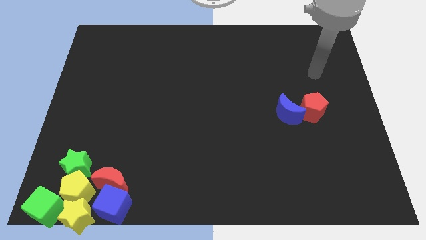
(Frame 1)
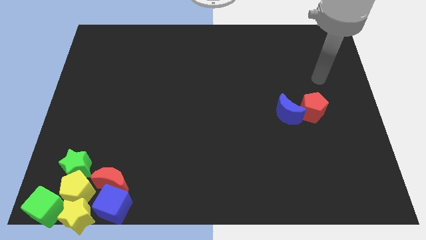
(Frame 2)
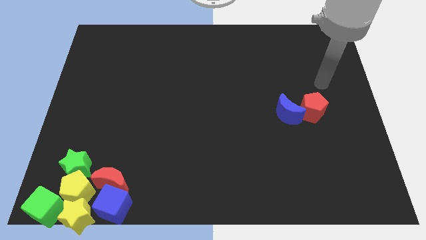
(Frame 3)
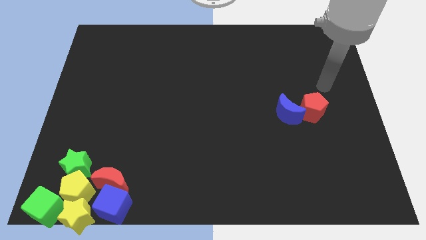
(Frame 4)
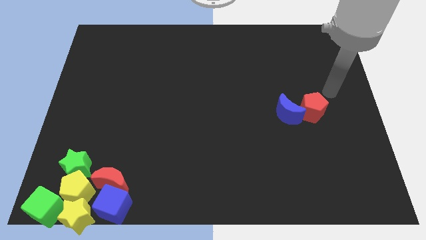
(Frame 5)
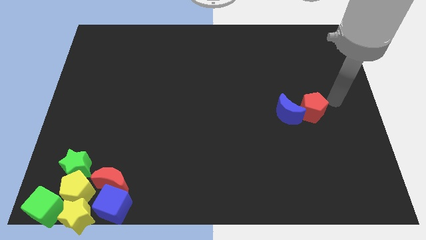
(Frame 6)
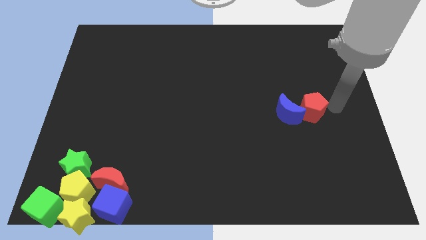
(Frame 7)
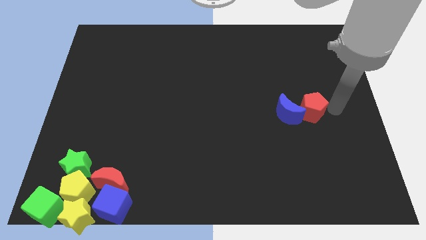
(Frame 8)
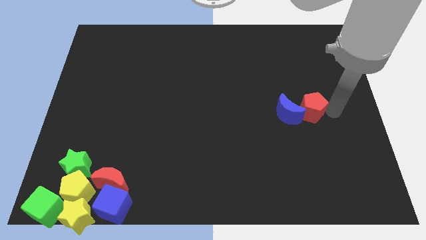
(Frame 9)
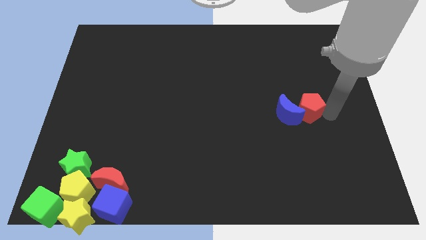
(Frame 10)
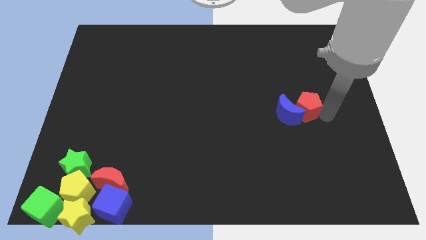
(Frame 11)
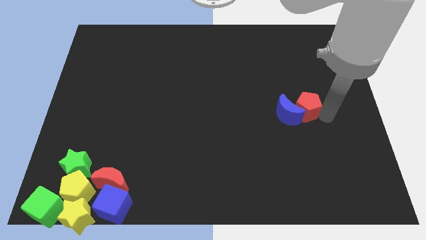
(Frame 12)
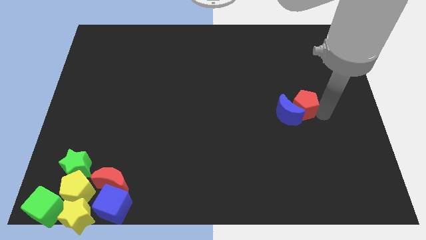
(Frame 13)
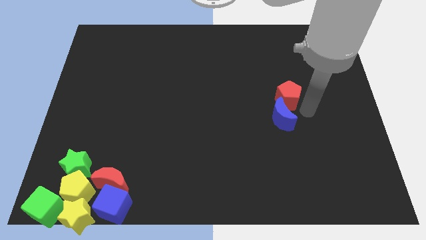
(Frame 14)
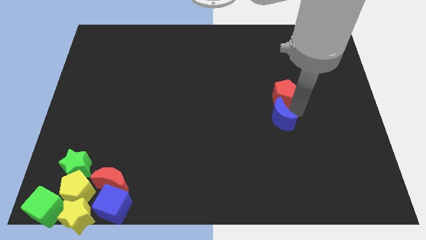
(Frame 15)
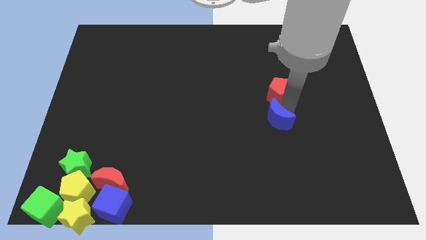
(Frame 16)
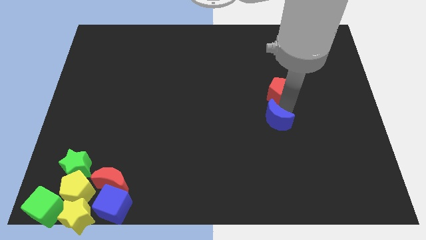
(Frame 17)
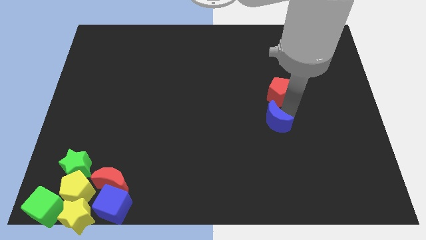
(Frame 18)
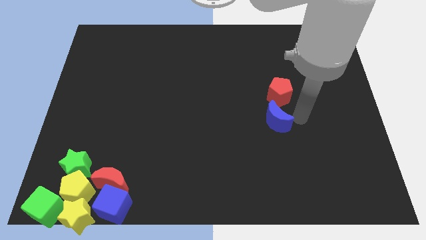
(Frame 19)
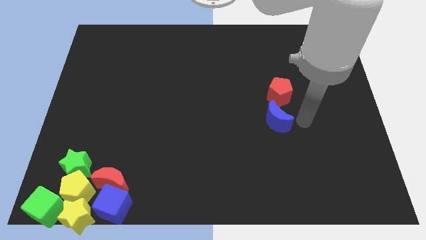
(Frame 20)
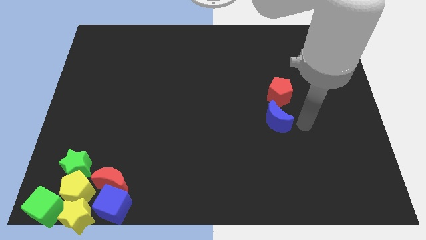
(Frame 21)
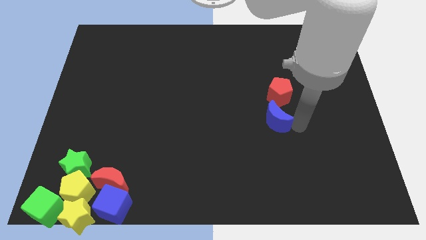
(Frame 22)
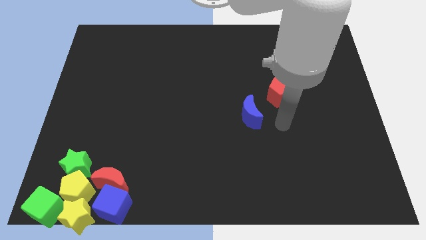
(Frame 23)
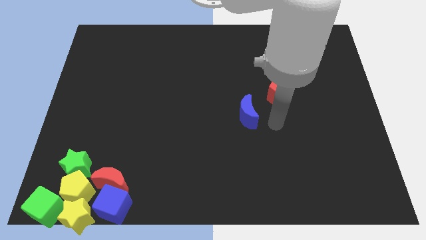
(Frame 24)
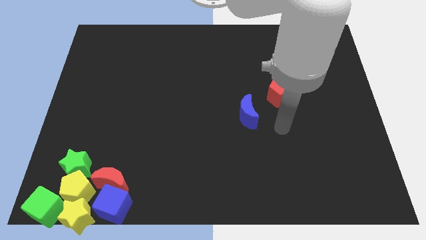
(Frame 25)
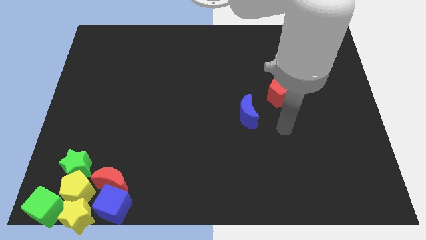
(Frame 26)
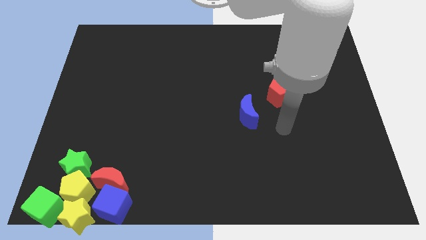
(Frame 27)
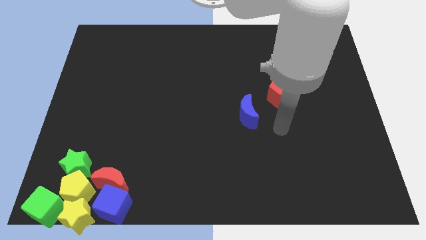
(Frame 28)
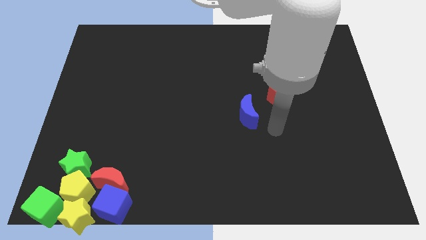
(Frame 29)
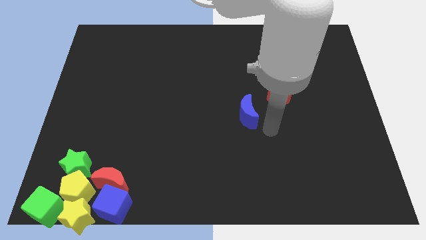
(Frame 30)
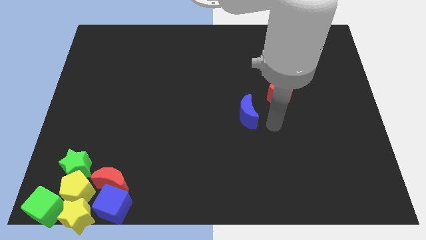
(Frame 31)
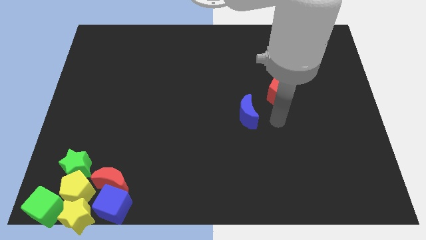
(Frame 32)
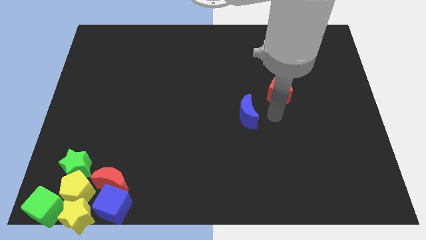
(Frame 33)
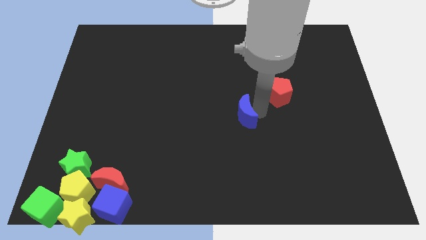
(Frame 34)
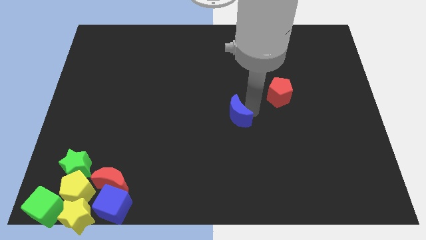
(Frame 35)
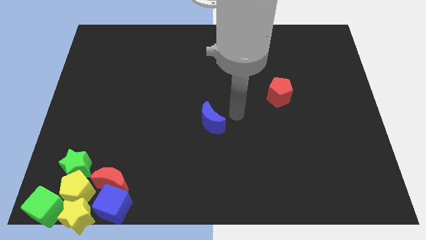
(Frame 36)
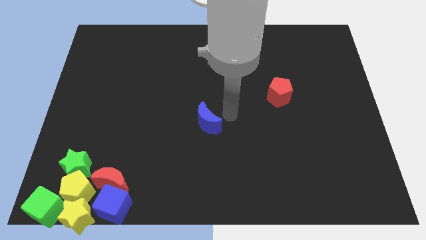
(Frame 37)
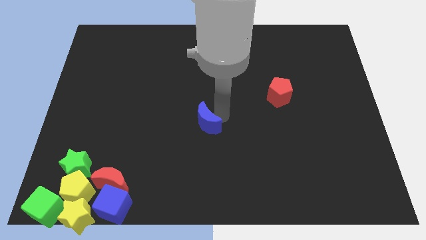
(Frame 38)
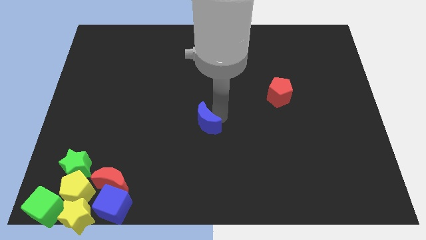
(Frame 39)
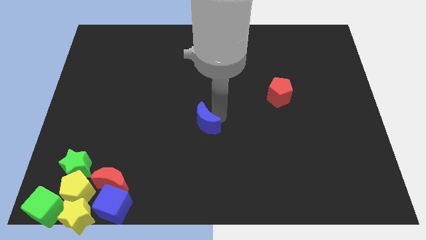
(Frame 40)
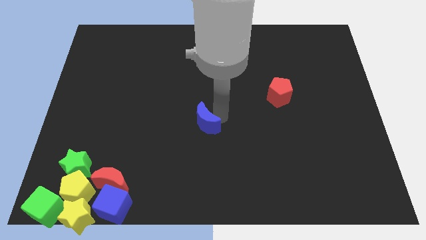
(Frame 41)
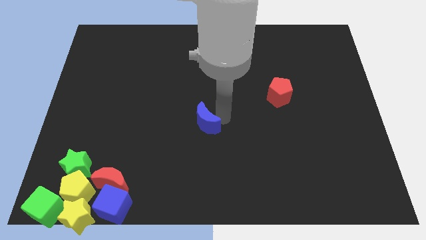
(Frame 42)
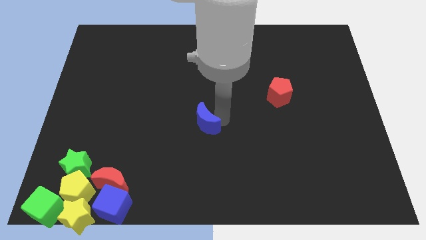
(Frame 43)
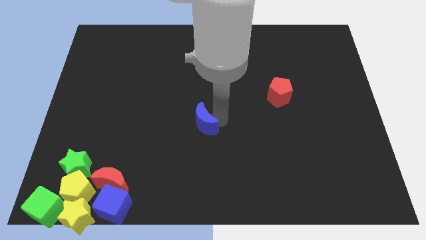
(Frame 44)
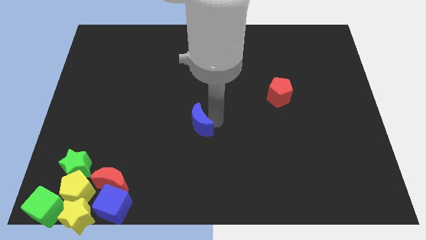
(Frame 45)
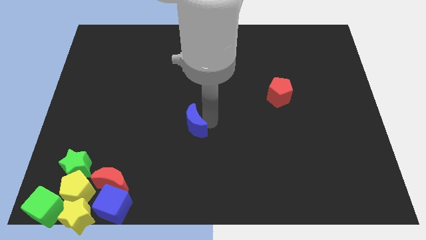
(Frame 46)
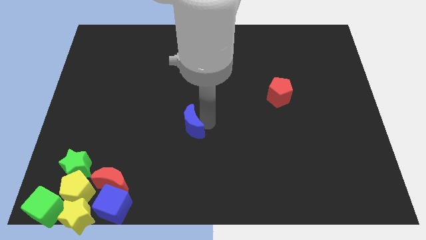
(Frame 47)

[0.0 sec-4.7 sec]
separate red pentagon and the blue moon

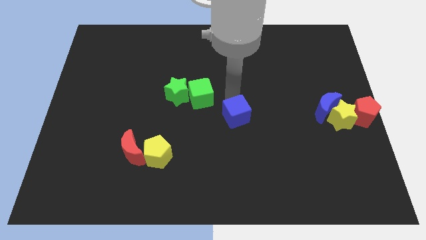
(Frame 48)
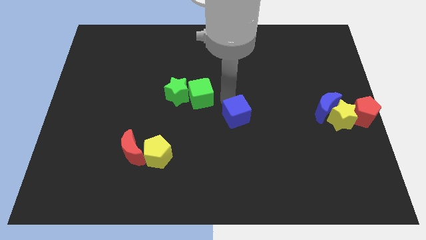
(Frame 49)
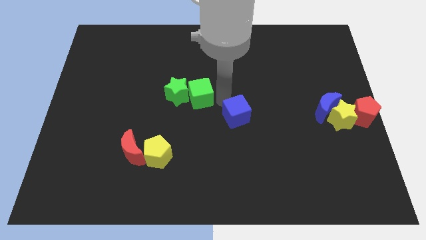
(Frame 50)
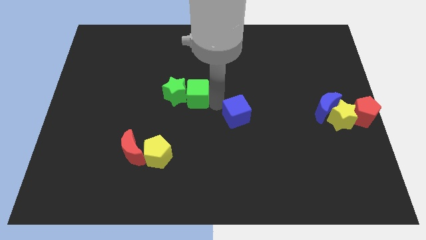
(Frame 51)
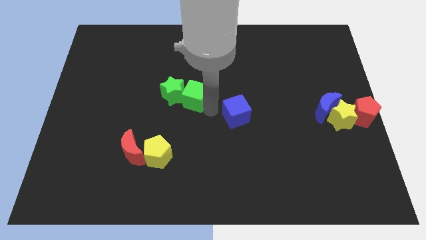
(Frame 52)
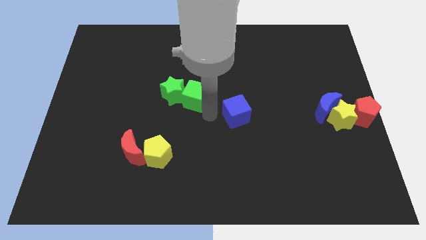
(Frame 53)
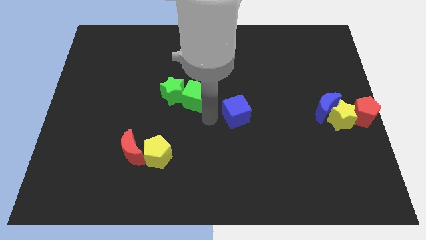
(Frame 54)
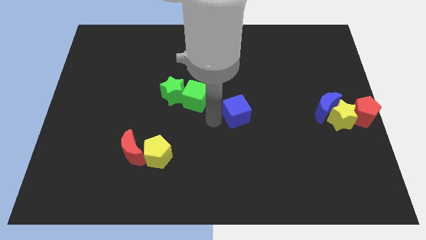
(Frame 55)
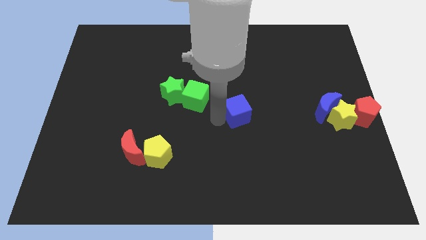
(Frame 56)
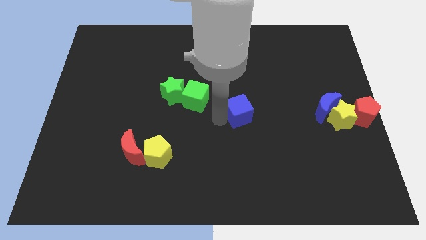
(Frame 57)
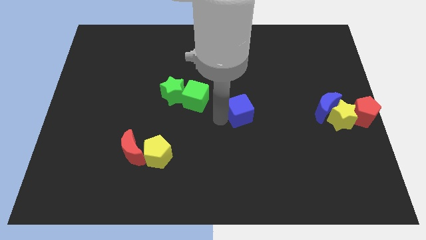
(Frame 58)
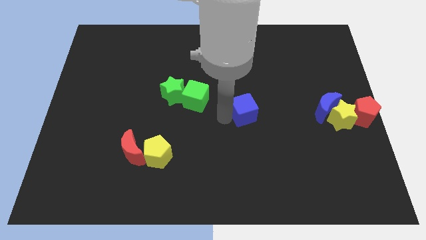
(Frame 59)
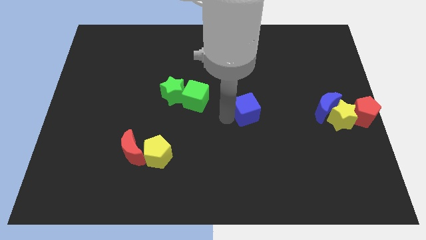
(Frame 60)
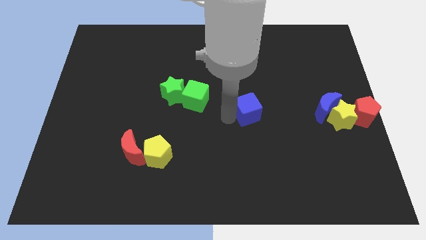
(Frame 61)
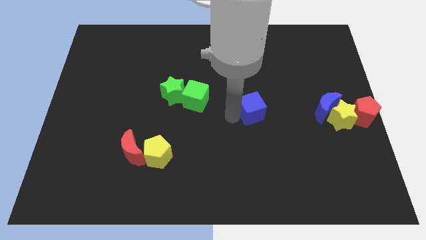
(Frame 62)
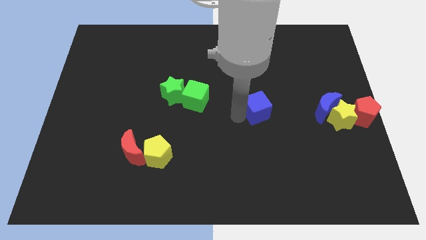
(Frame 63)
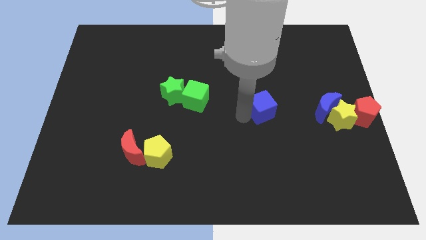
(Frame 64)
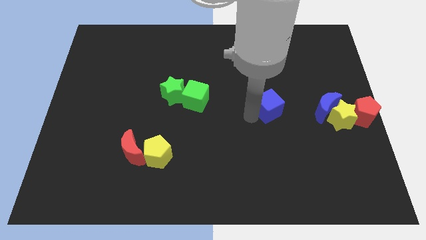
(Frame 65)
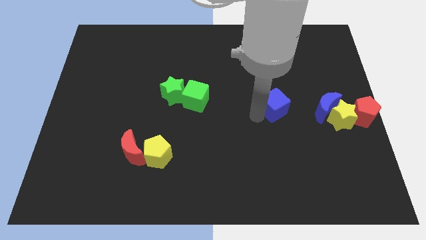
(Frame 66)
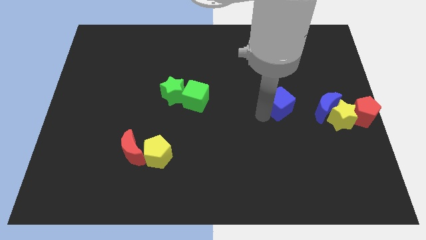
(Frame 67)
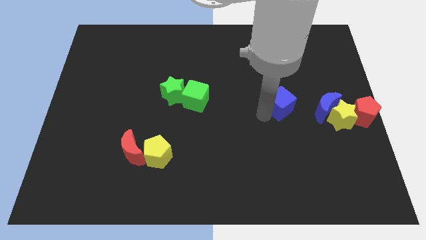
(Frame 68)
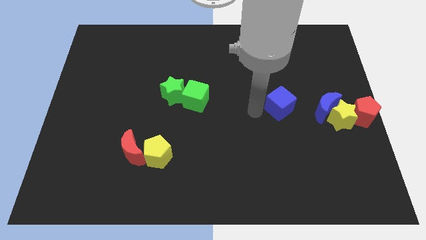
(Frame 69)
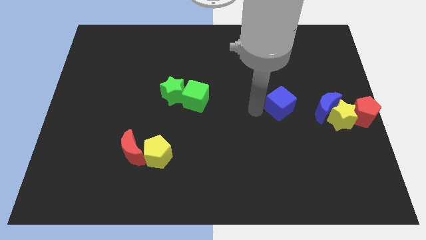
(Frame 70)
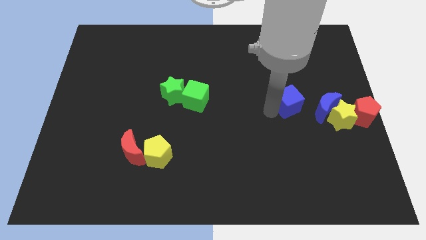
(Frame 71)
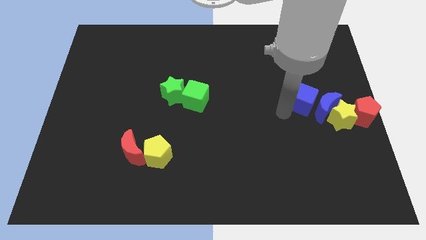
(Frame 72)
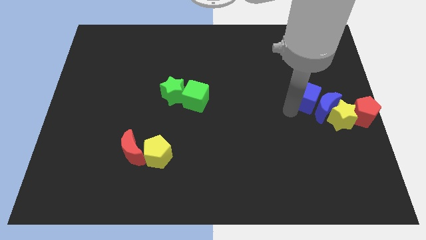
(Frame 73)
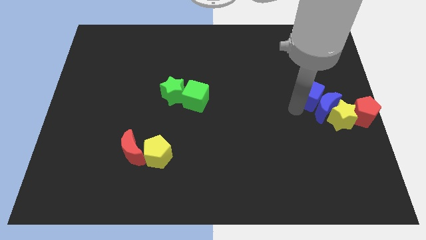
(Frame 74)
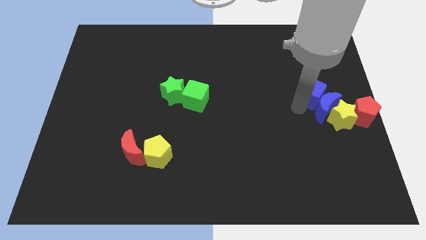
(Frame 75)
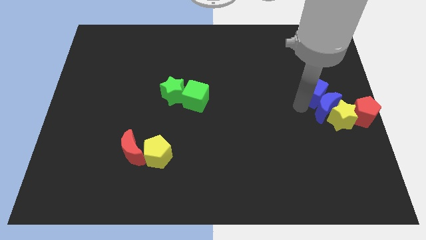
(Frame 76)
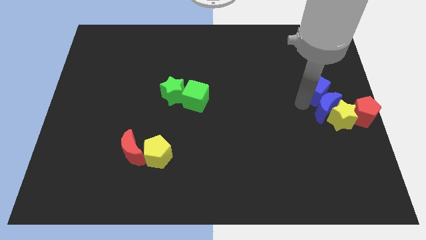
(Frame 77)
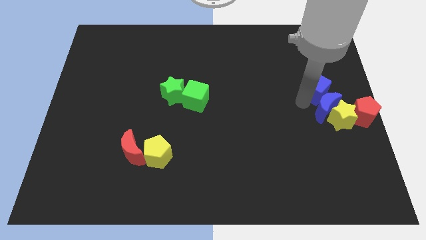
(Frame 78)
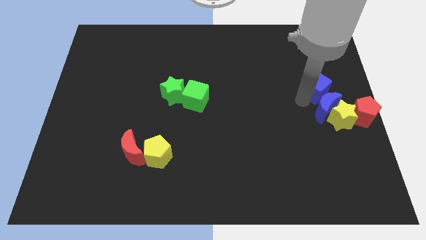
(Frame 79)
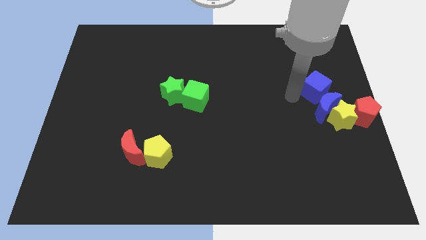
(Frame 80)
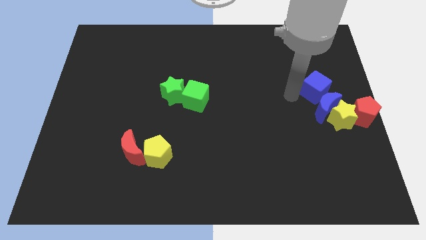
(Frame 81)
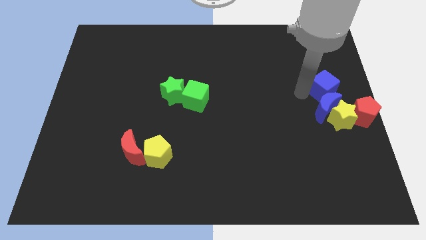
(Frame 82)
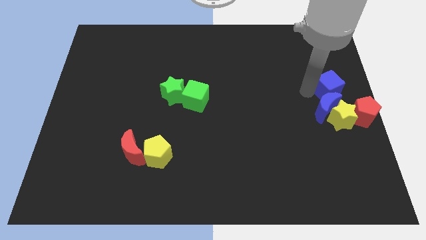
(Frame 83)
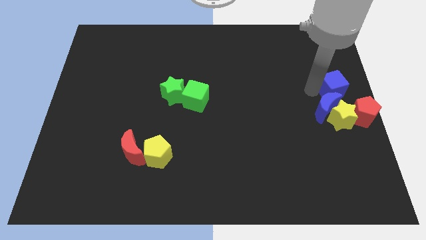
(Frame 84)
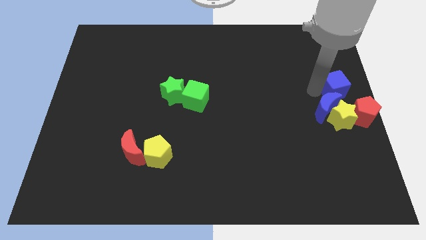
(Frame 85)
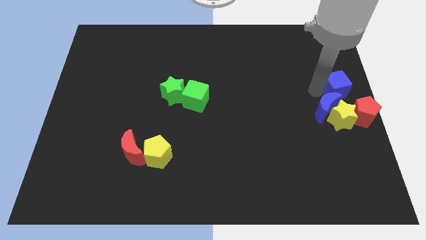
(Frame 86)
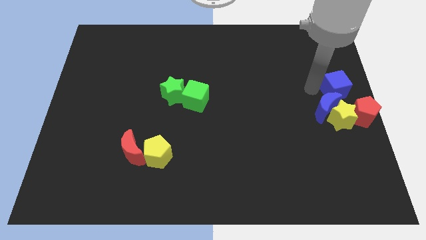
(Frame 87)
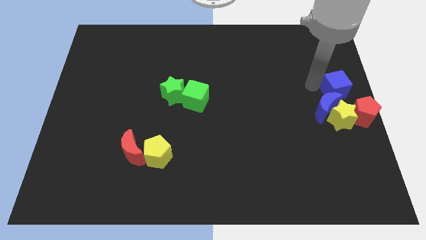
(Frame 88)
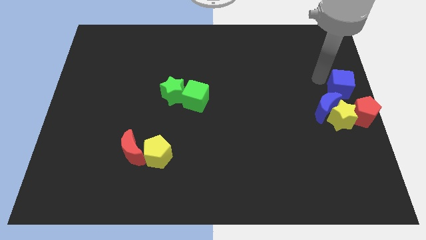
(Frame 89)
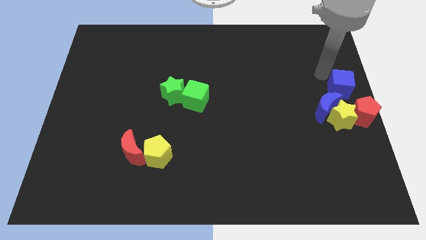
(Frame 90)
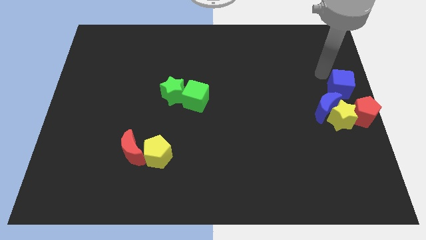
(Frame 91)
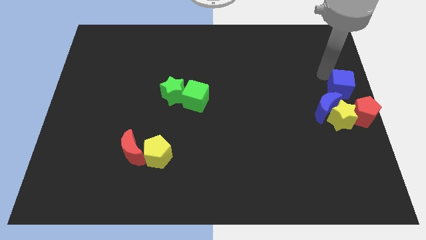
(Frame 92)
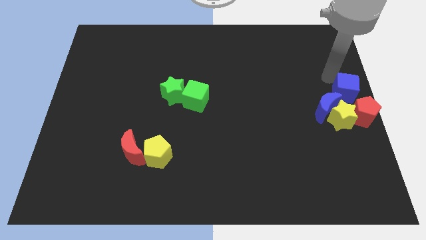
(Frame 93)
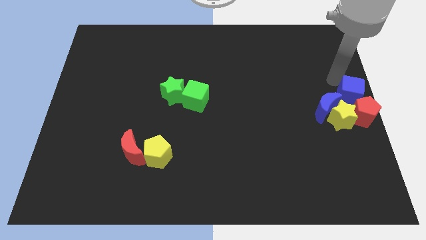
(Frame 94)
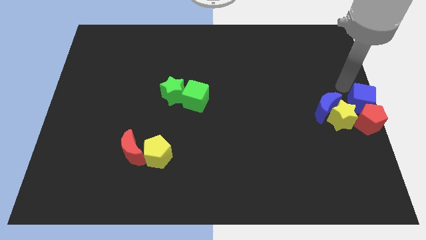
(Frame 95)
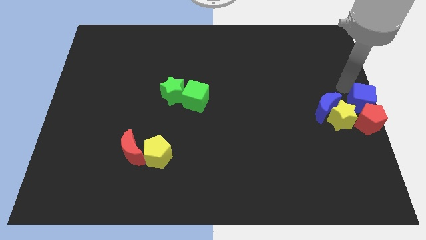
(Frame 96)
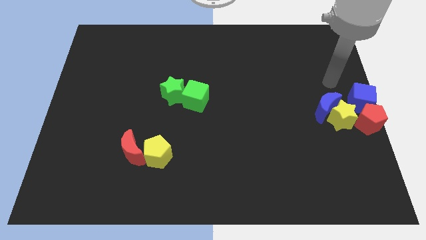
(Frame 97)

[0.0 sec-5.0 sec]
move the blue cube into the red pentagon
